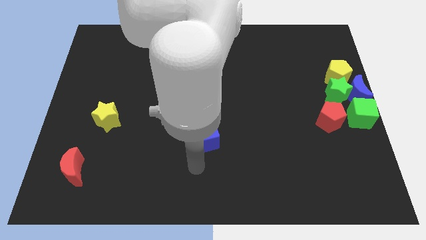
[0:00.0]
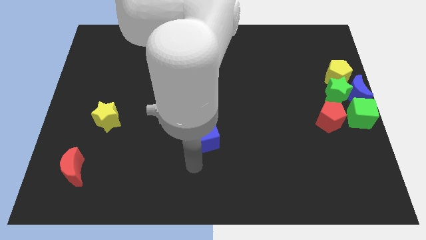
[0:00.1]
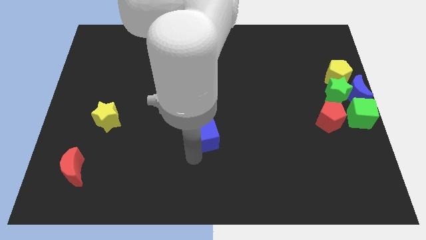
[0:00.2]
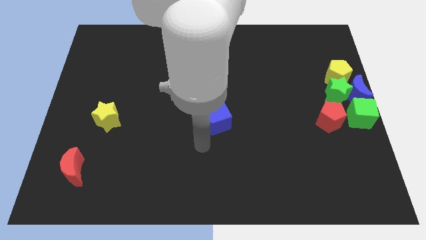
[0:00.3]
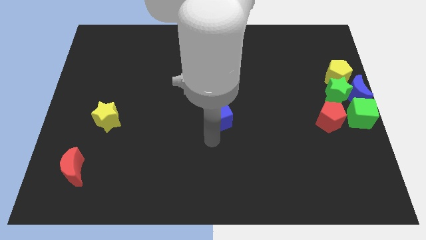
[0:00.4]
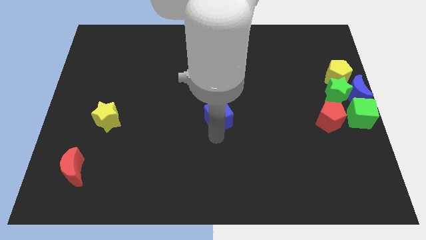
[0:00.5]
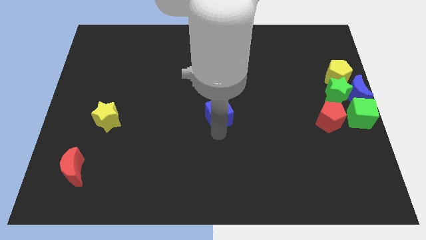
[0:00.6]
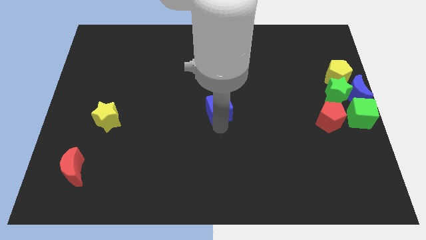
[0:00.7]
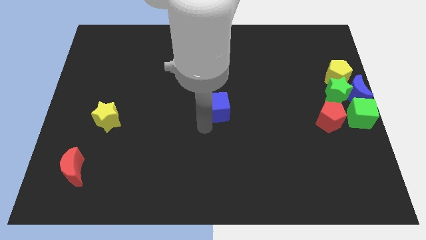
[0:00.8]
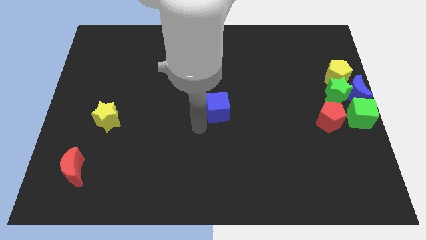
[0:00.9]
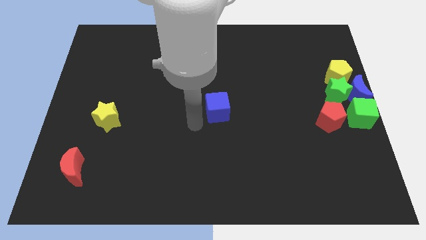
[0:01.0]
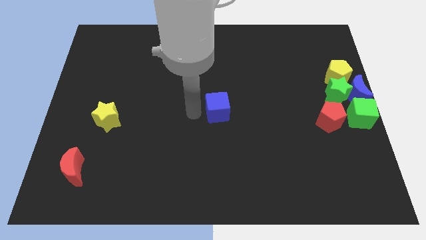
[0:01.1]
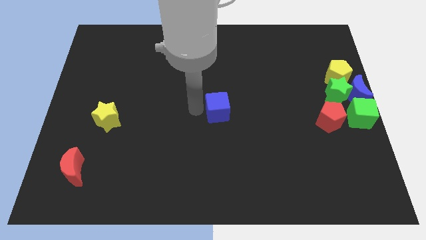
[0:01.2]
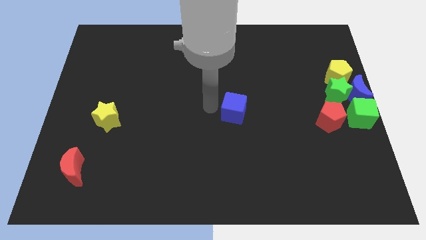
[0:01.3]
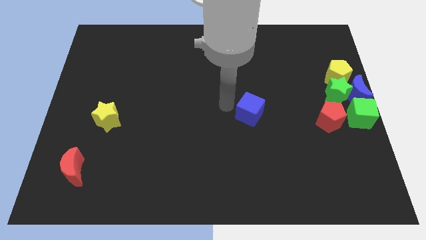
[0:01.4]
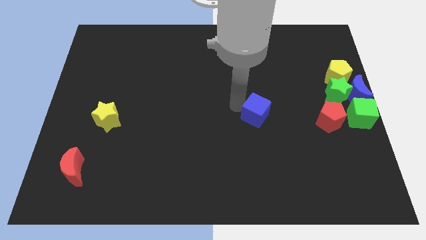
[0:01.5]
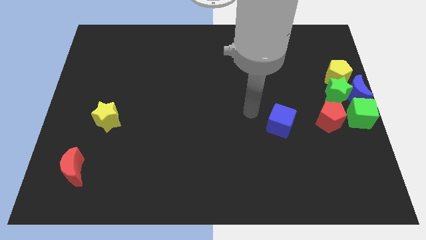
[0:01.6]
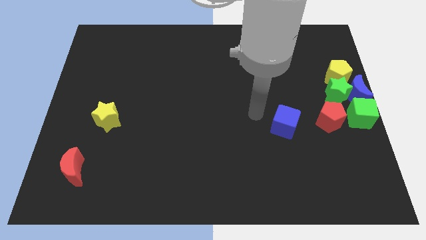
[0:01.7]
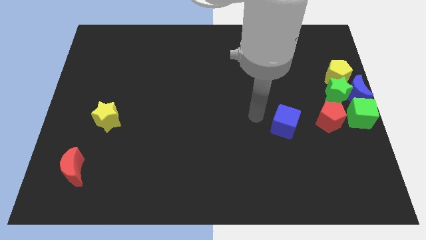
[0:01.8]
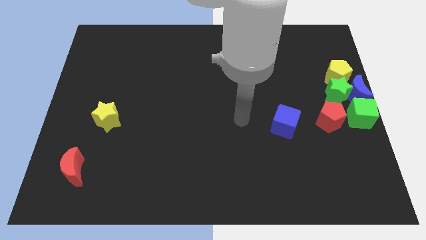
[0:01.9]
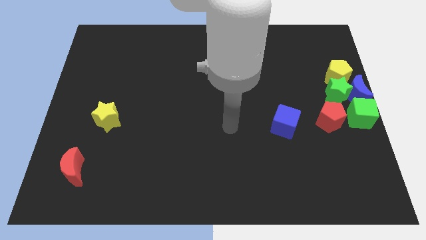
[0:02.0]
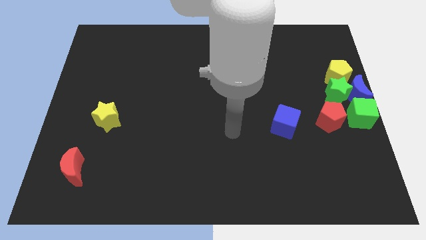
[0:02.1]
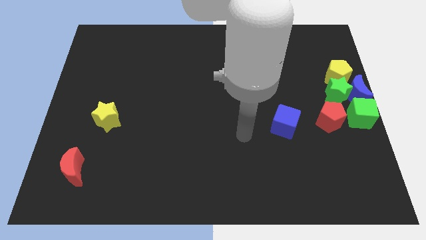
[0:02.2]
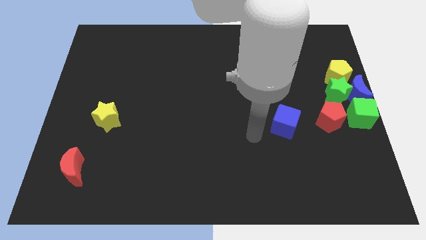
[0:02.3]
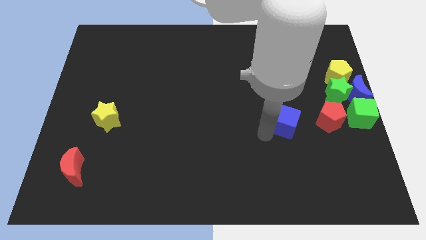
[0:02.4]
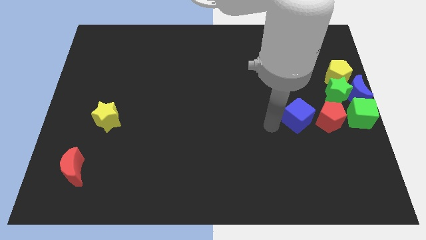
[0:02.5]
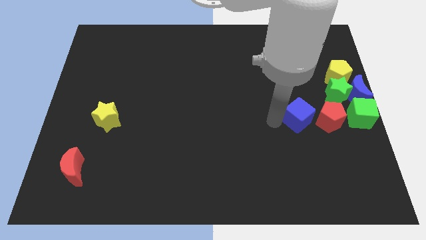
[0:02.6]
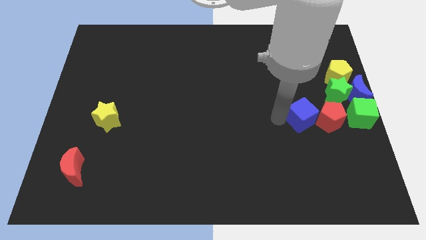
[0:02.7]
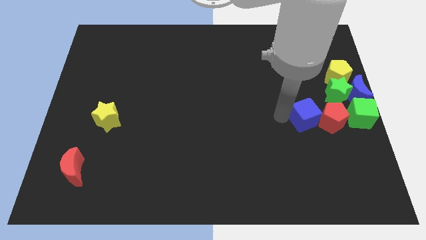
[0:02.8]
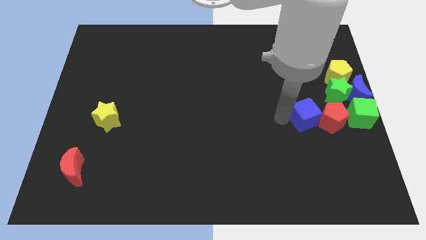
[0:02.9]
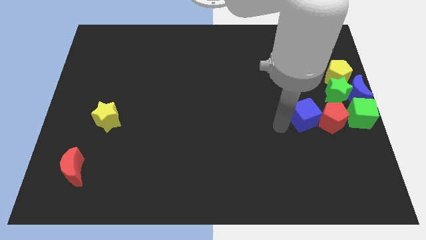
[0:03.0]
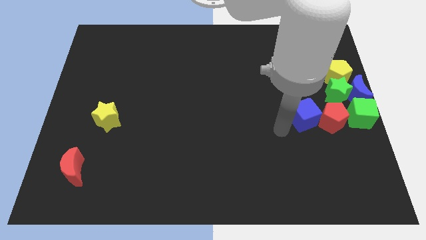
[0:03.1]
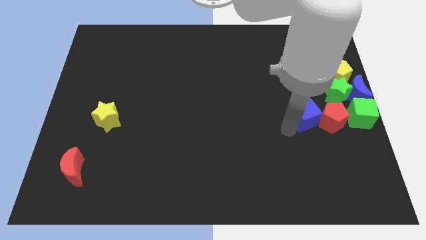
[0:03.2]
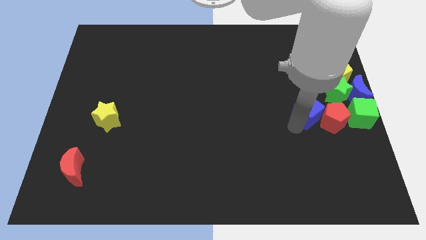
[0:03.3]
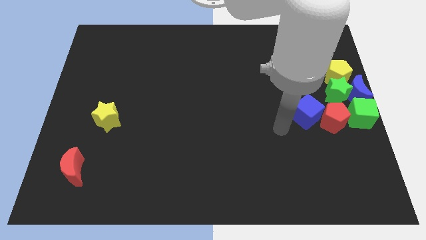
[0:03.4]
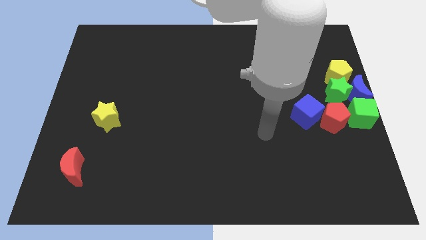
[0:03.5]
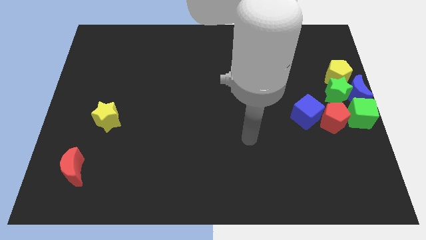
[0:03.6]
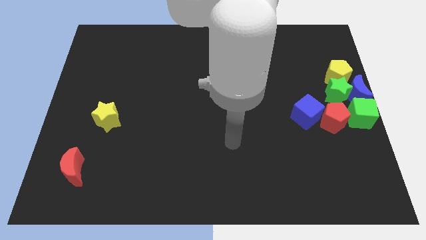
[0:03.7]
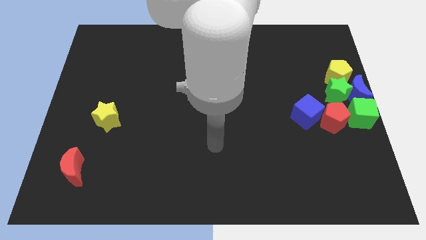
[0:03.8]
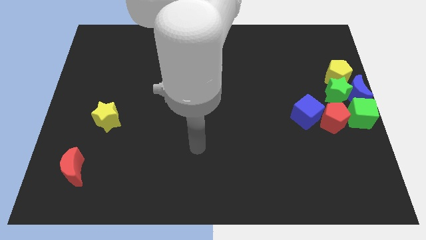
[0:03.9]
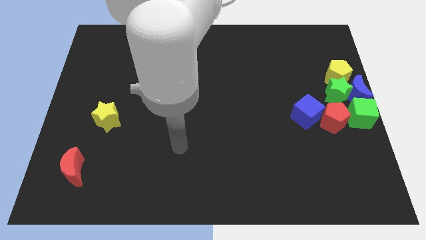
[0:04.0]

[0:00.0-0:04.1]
put the blue cube into the left side of the red pentagon

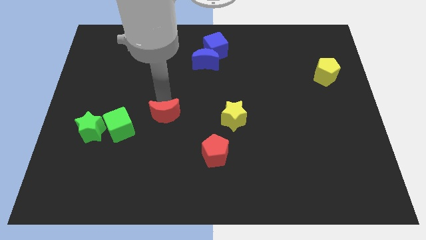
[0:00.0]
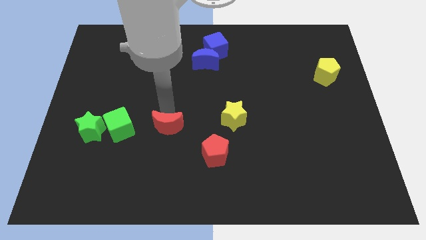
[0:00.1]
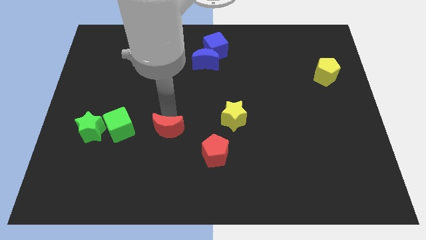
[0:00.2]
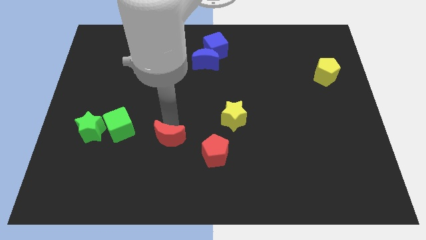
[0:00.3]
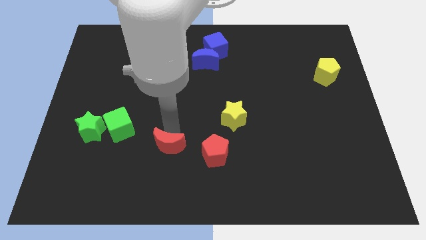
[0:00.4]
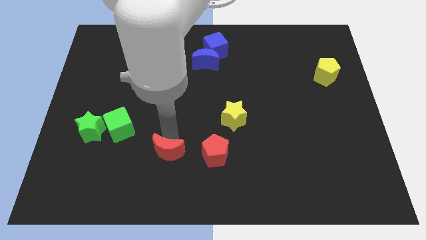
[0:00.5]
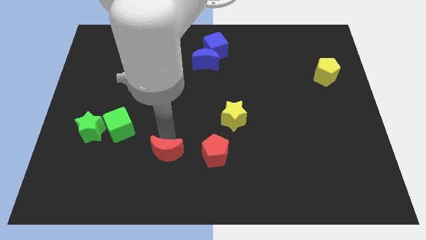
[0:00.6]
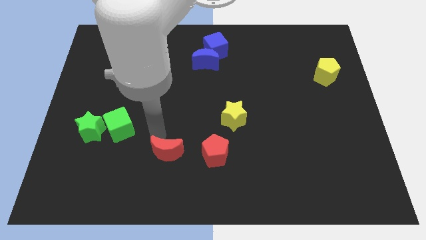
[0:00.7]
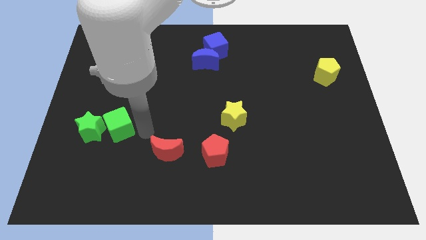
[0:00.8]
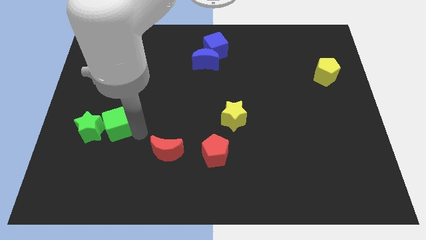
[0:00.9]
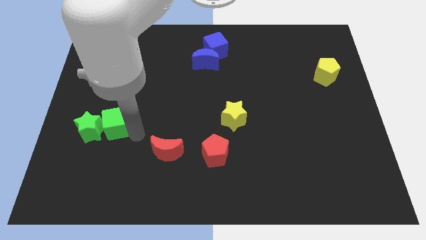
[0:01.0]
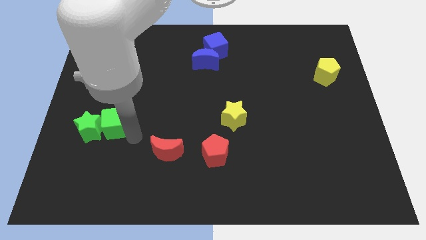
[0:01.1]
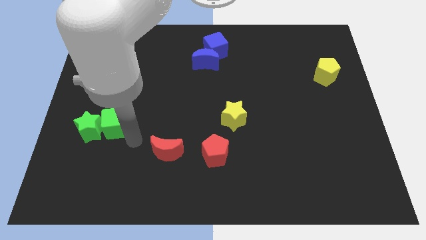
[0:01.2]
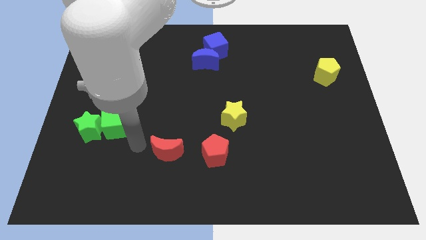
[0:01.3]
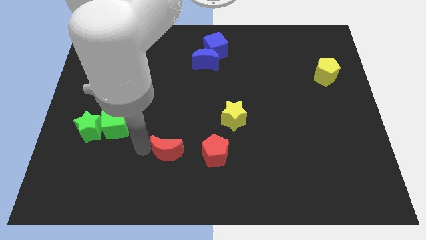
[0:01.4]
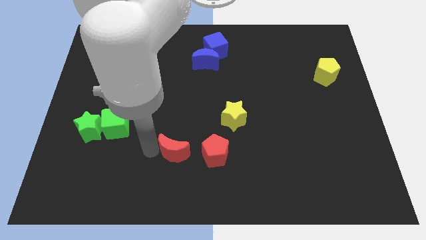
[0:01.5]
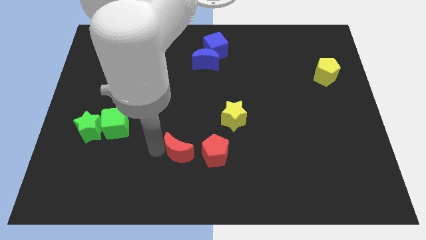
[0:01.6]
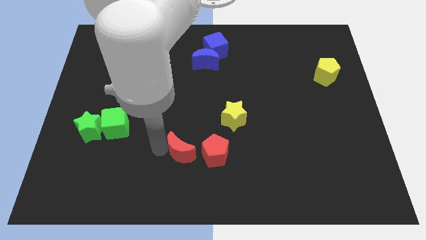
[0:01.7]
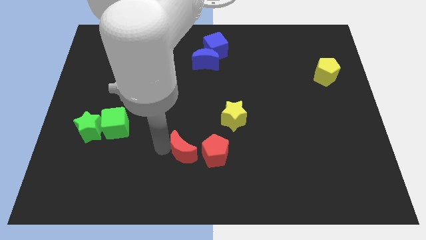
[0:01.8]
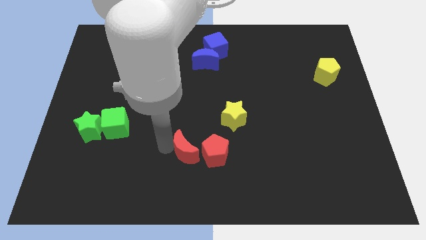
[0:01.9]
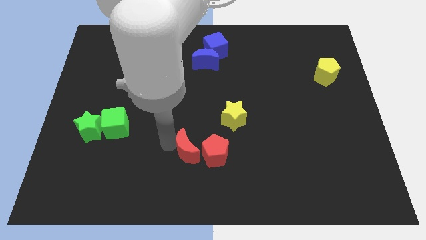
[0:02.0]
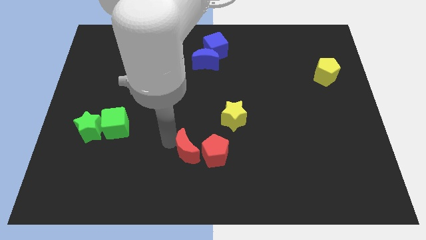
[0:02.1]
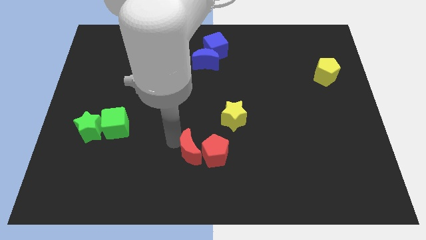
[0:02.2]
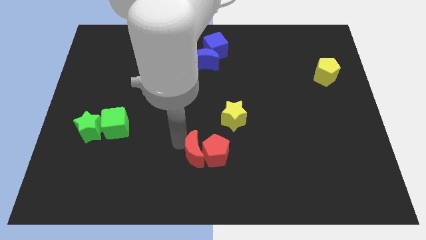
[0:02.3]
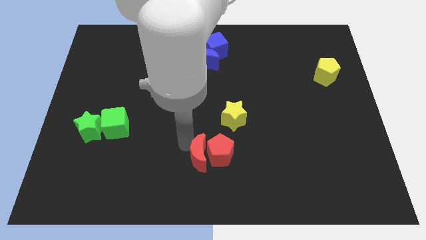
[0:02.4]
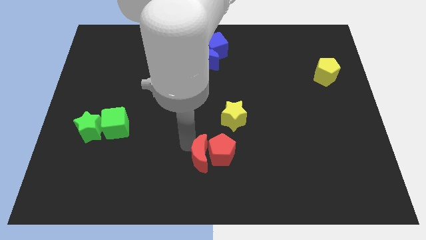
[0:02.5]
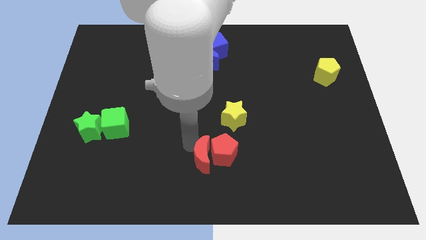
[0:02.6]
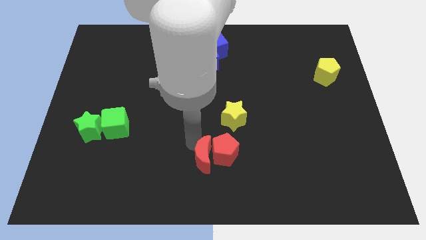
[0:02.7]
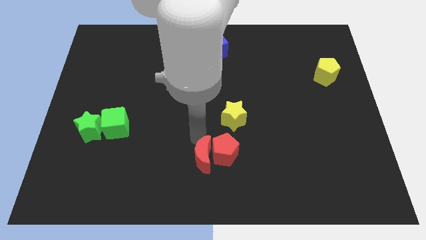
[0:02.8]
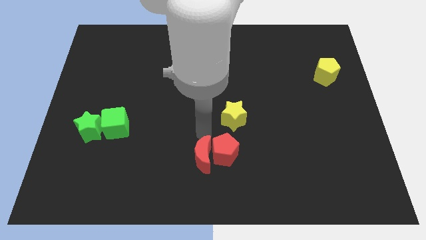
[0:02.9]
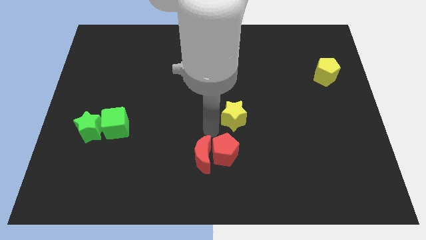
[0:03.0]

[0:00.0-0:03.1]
push the red moon into the red pentagon

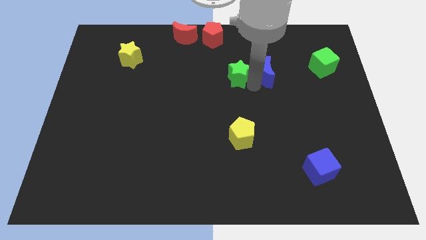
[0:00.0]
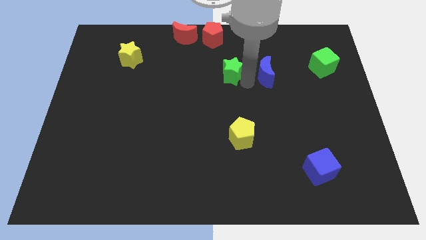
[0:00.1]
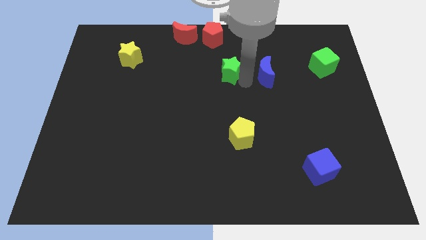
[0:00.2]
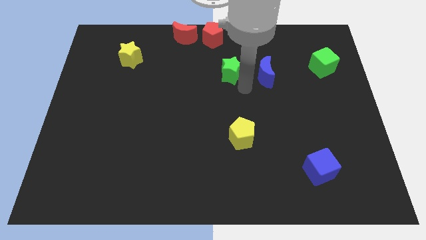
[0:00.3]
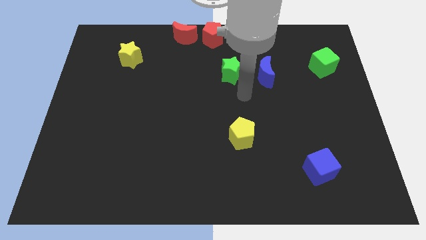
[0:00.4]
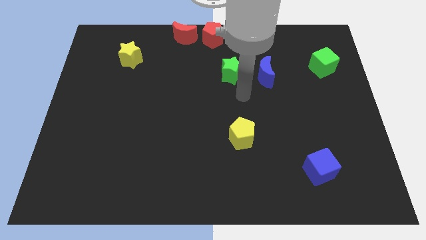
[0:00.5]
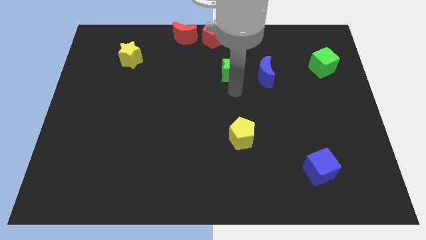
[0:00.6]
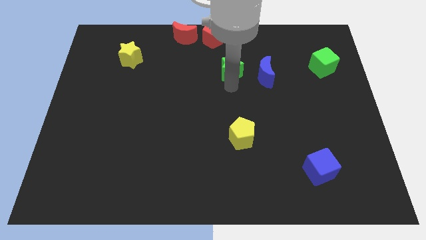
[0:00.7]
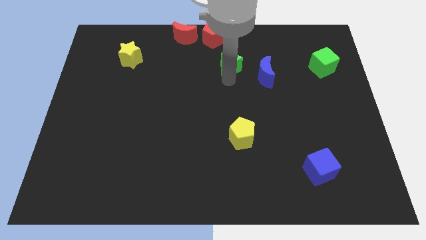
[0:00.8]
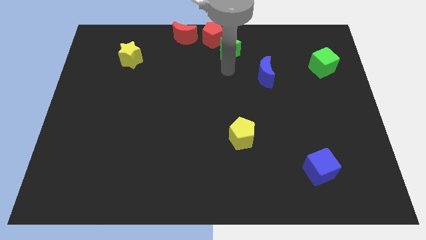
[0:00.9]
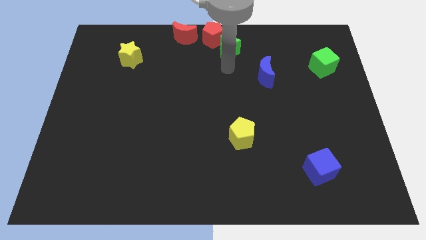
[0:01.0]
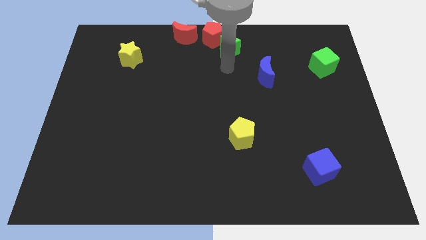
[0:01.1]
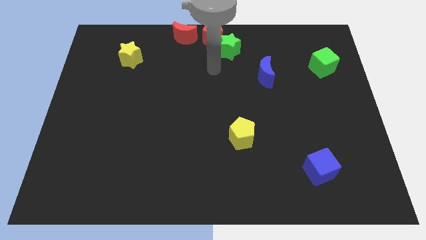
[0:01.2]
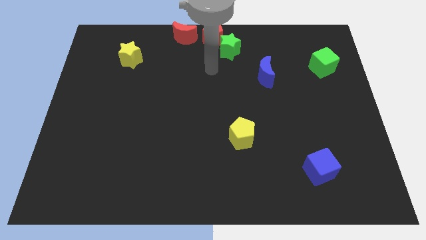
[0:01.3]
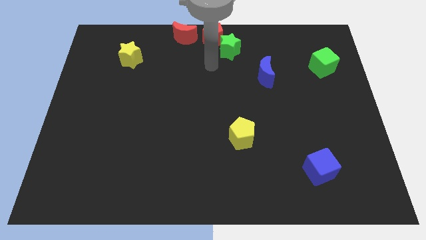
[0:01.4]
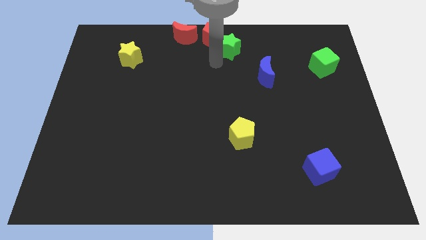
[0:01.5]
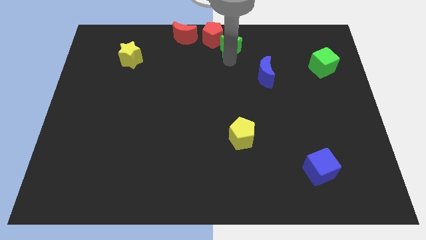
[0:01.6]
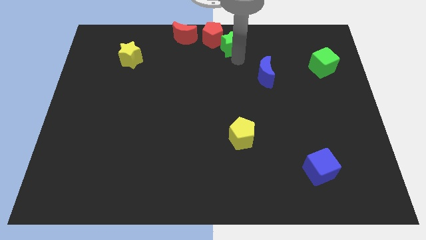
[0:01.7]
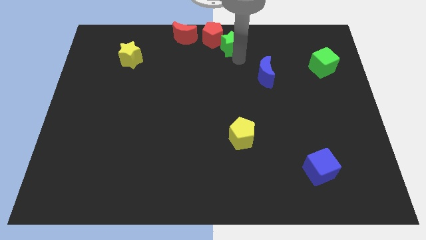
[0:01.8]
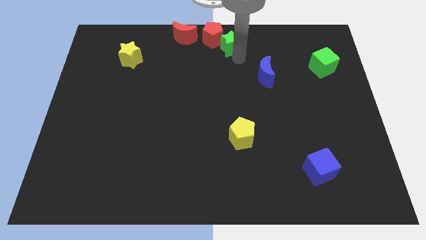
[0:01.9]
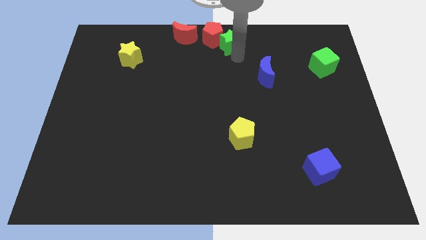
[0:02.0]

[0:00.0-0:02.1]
place the green star close to red pentagon
